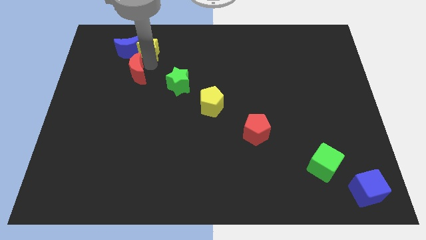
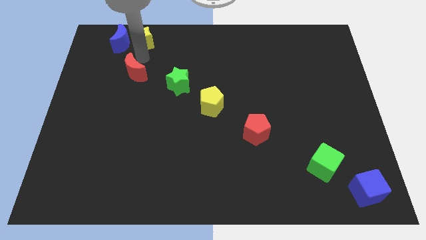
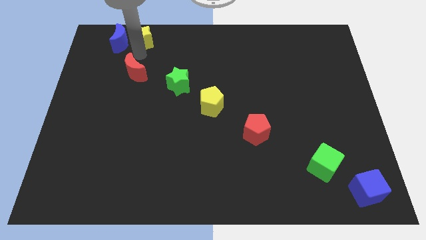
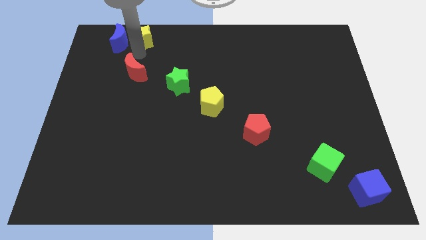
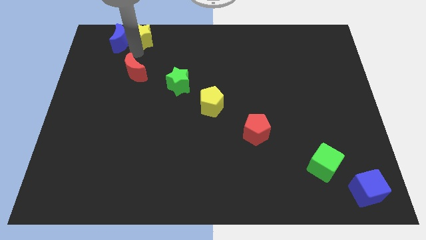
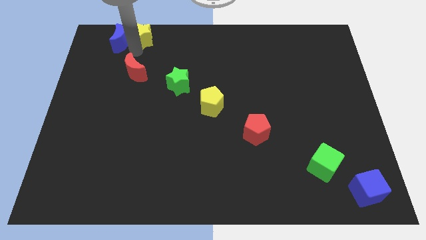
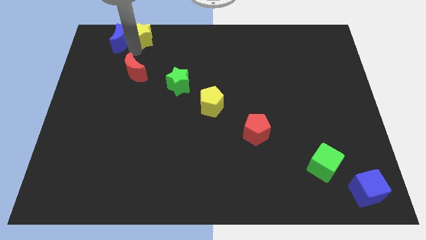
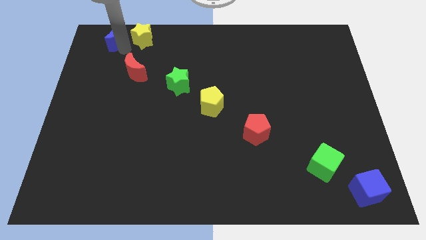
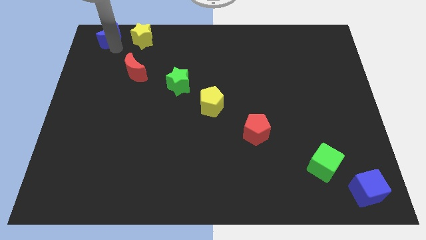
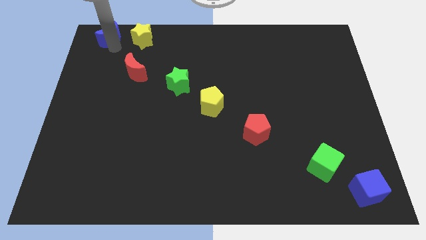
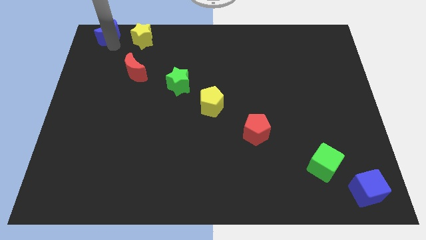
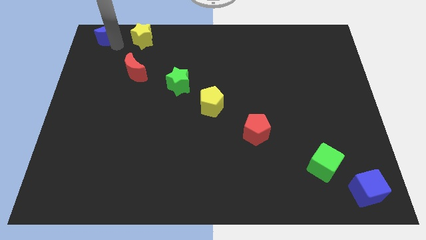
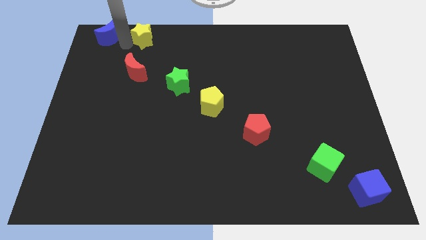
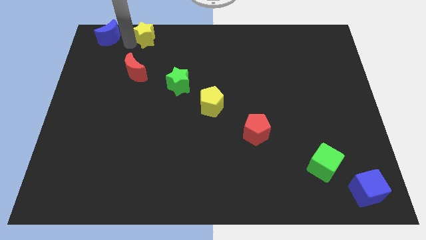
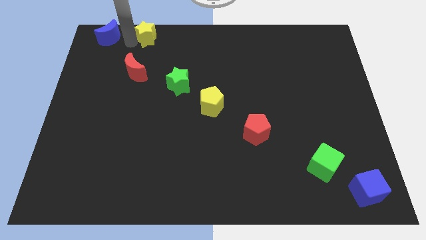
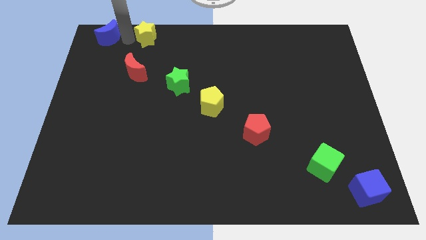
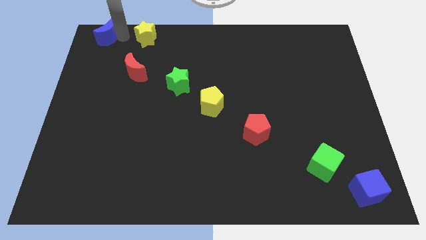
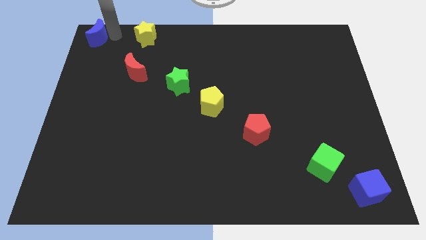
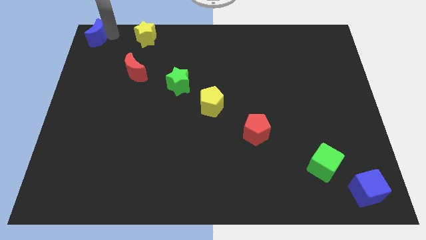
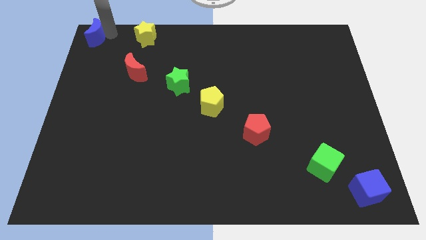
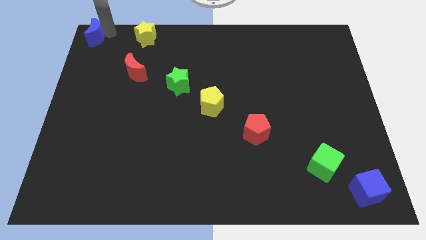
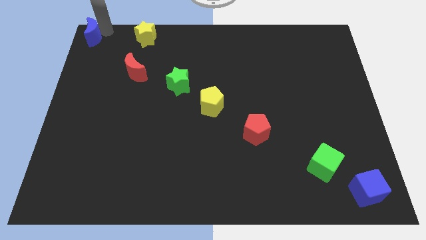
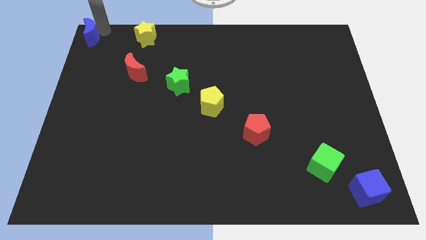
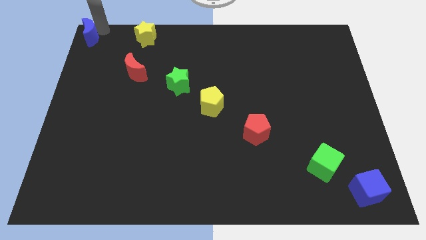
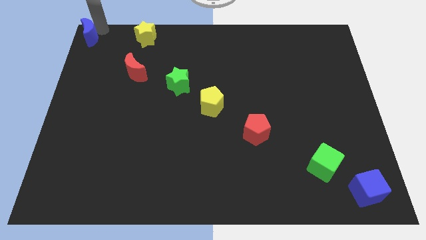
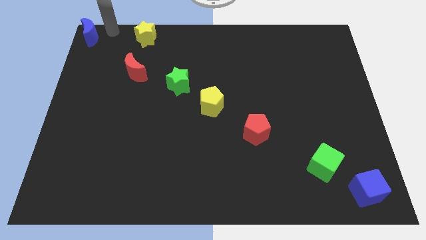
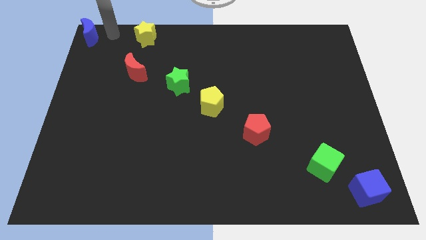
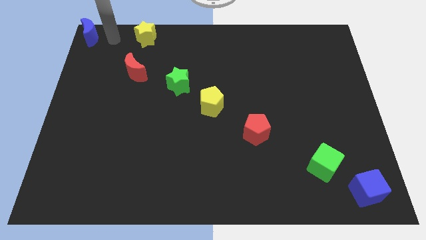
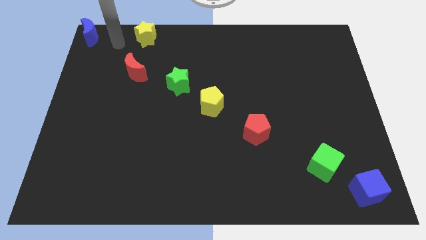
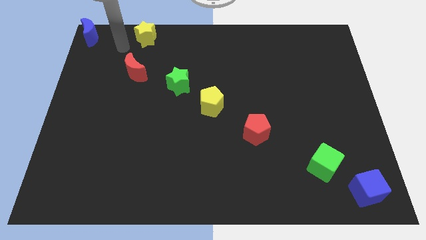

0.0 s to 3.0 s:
place the blue moon on the top left corner of the board

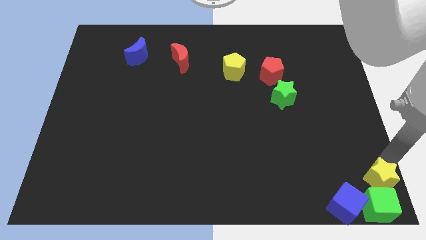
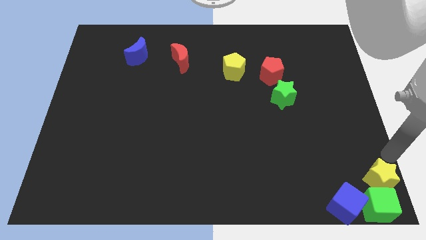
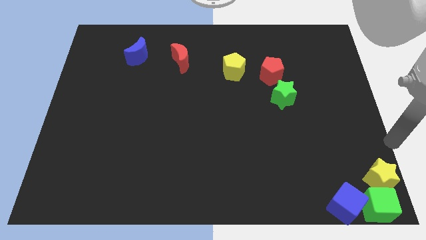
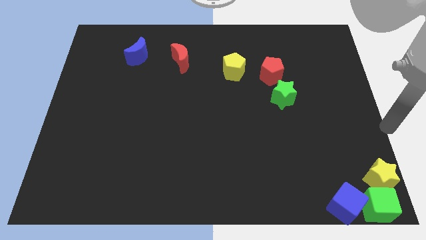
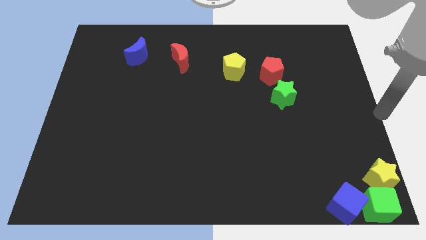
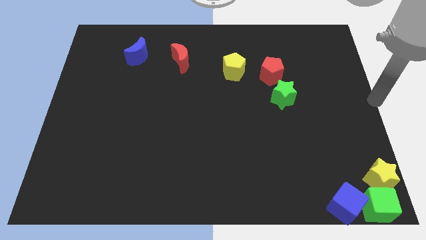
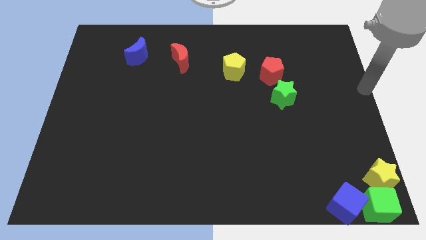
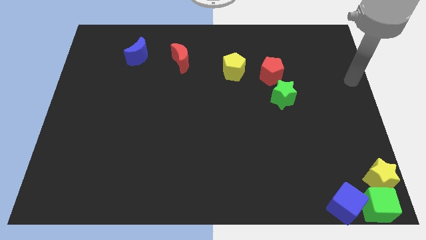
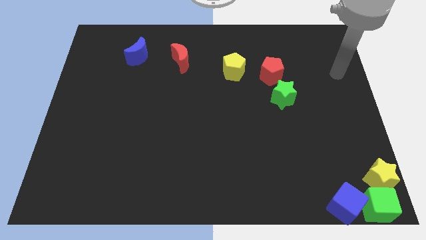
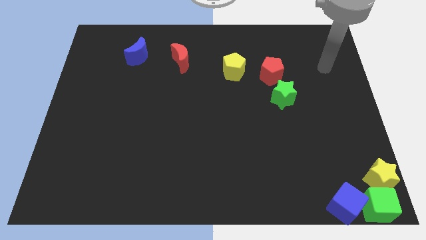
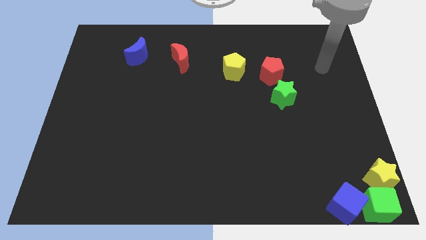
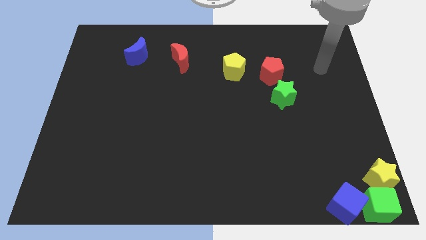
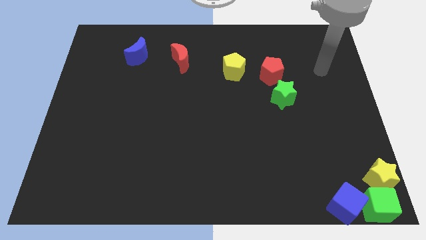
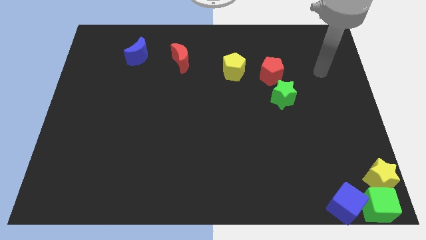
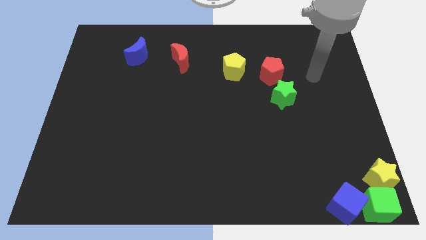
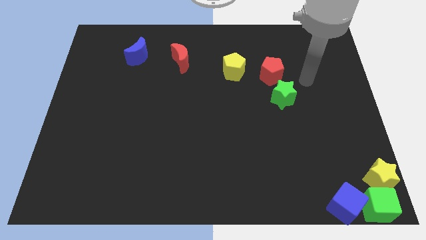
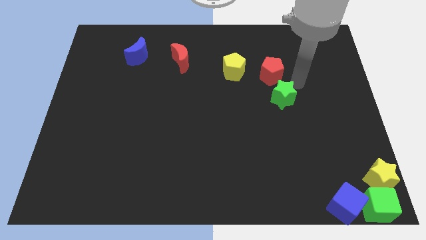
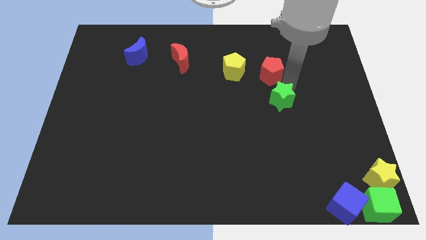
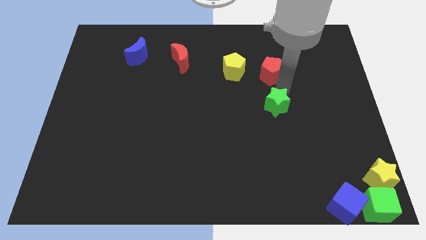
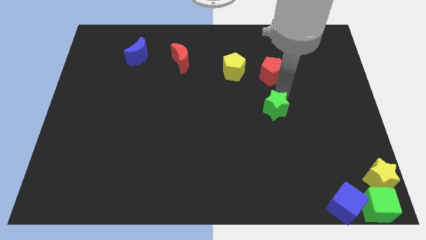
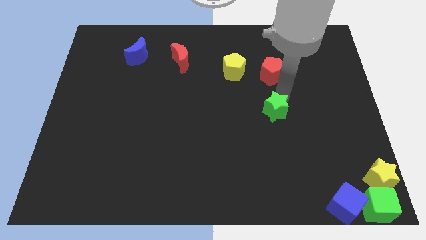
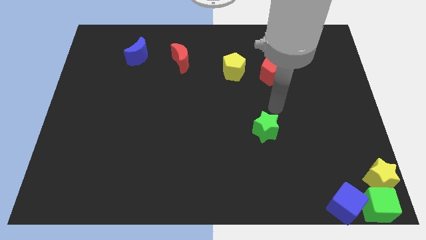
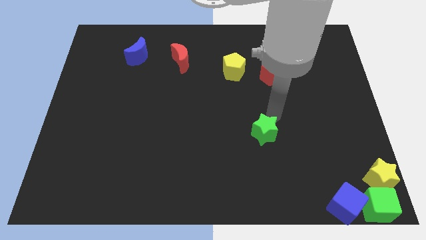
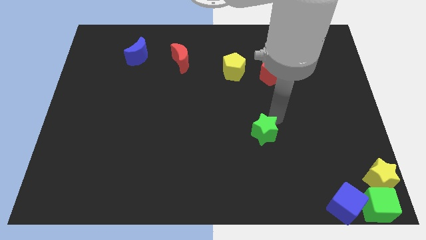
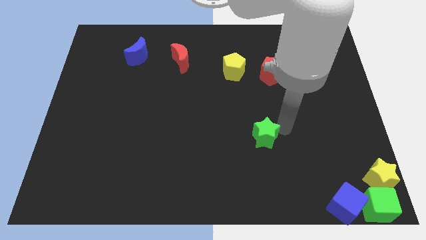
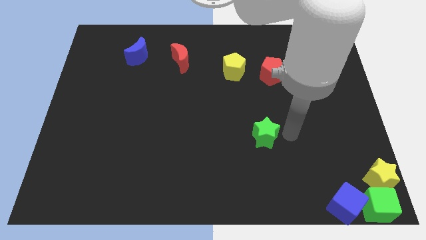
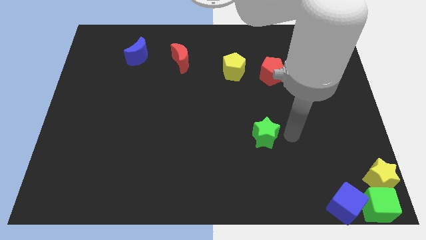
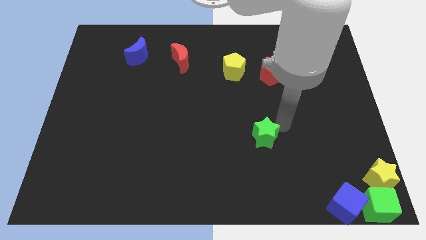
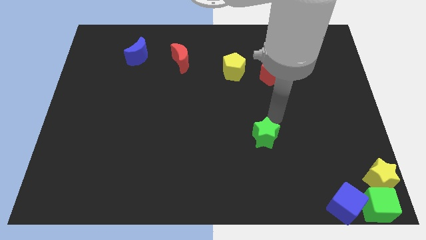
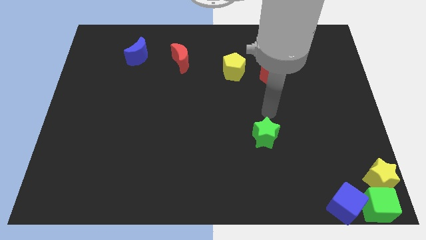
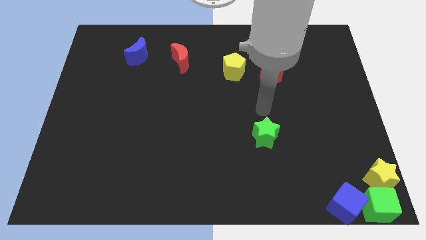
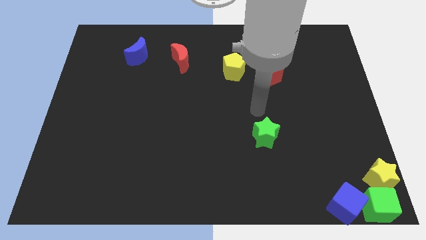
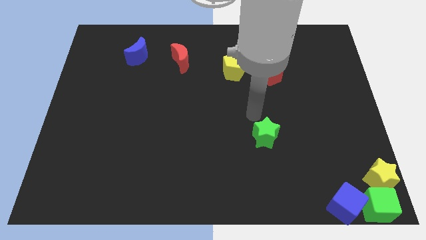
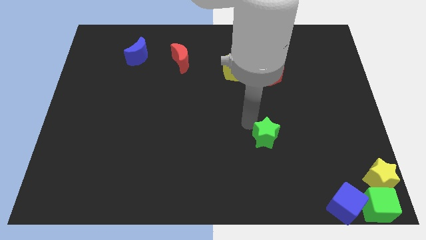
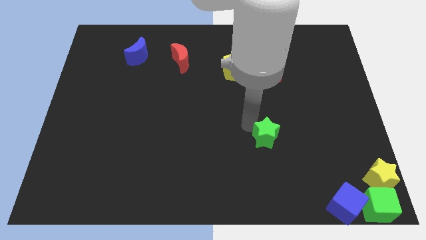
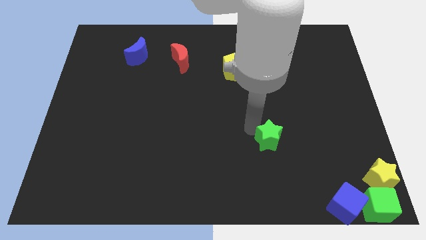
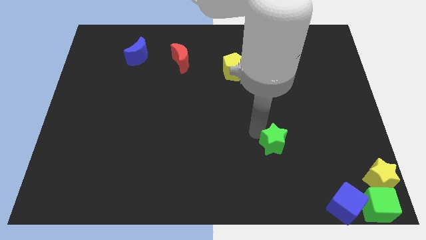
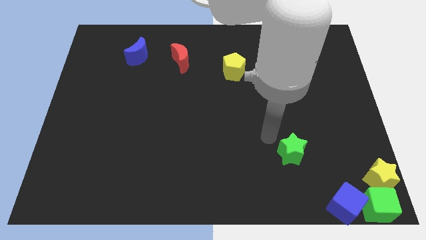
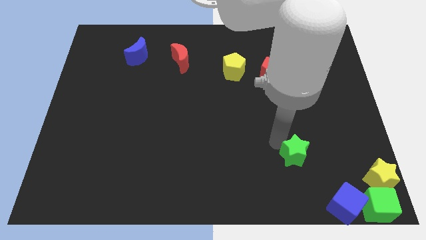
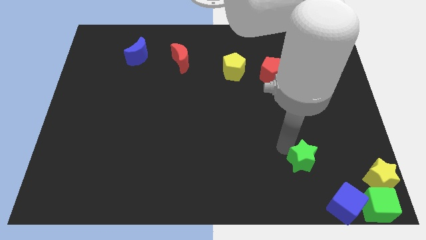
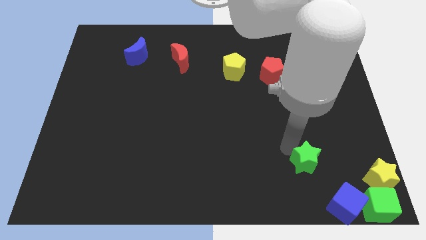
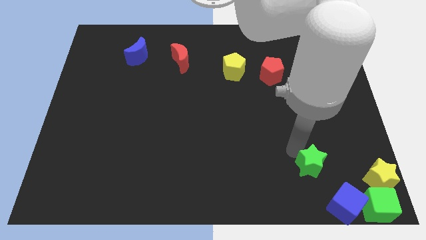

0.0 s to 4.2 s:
move the green star towards the group of blocks

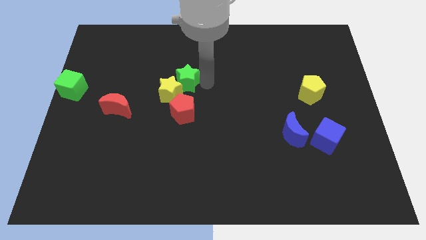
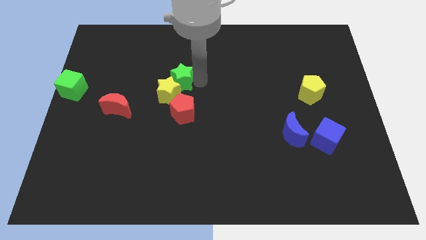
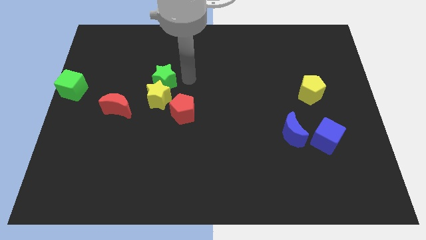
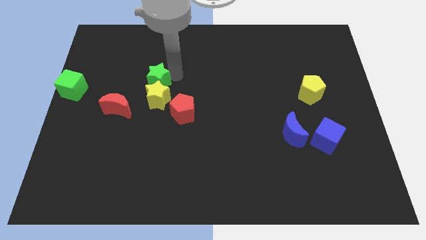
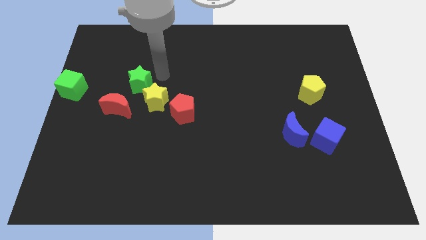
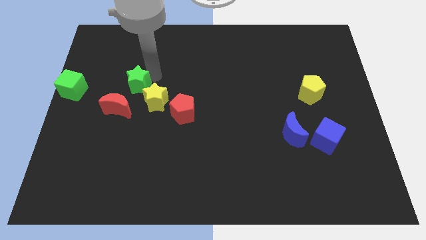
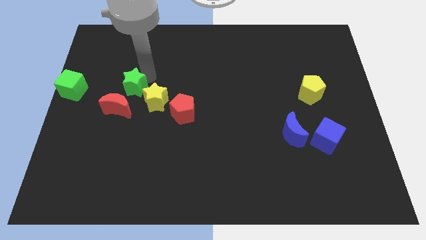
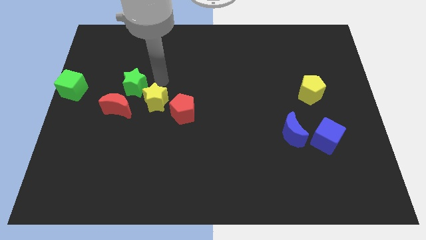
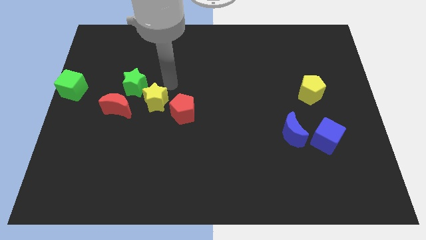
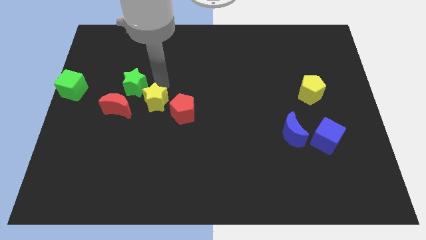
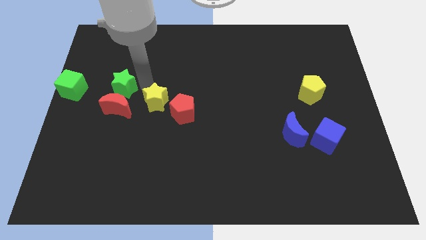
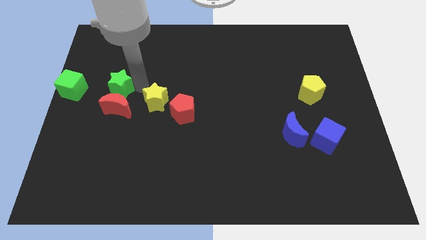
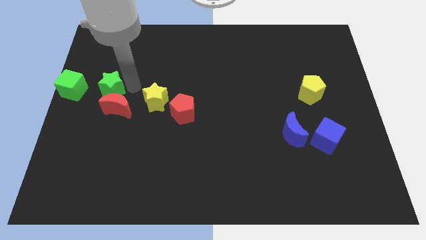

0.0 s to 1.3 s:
push the green star to the top of the red crescent

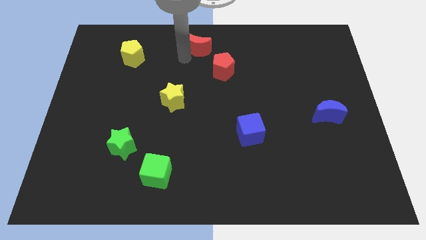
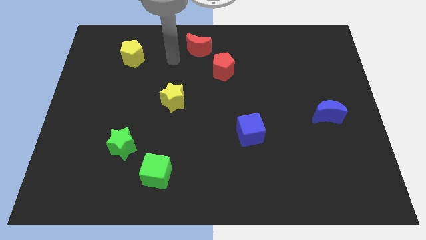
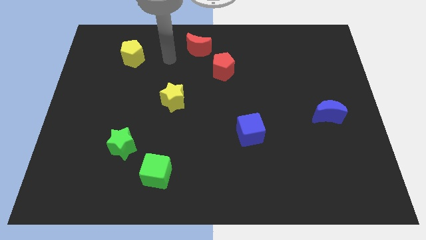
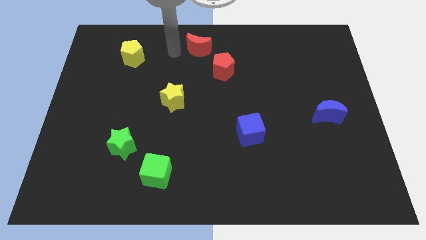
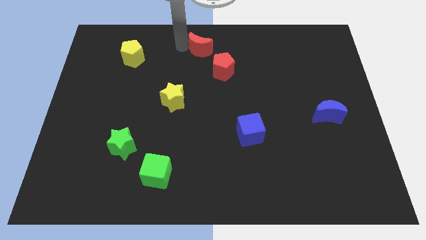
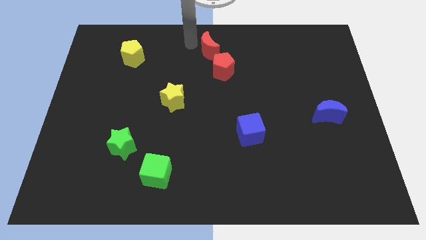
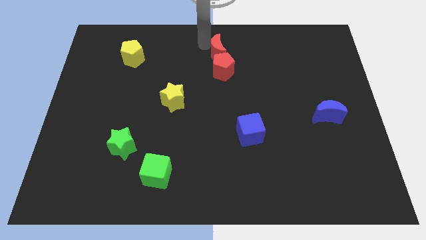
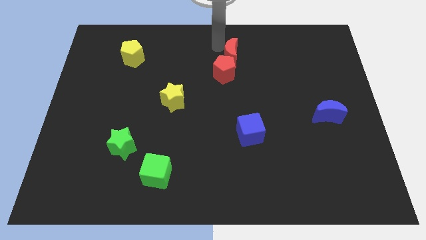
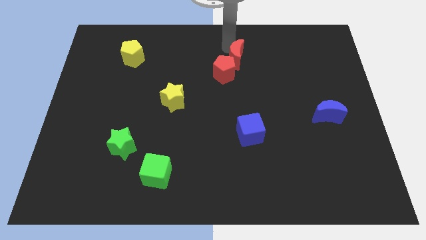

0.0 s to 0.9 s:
push the red crescent above the red pentagon
